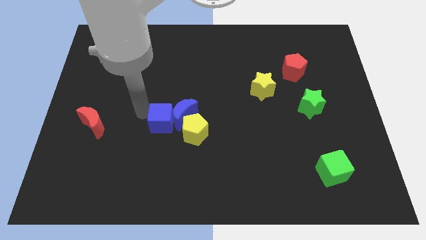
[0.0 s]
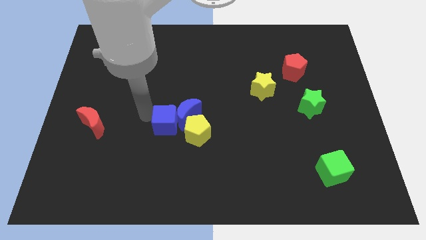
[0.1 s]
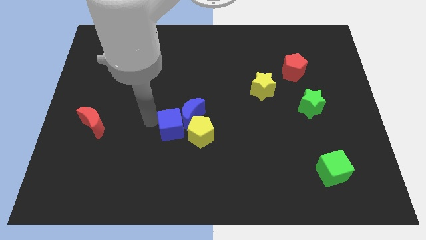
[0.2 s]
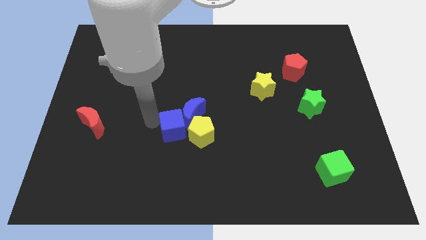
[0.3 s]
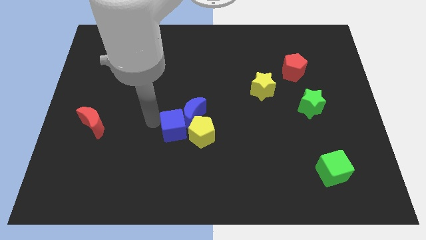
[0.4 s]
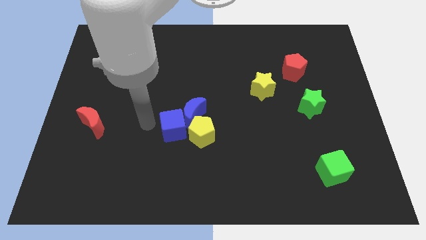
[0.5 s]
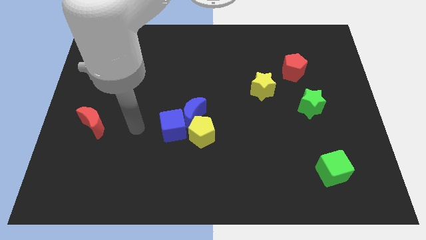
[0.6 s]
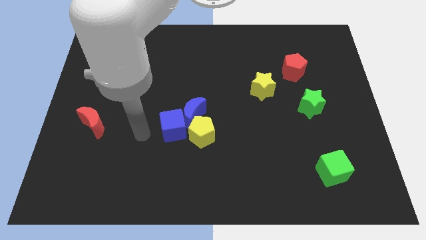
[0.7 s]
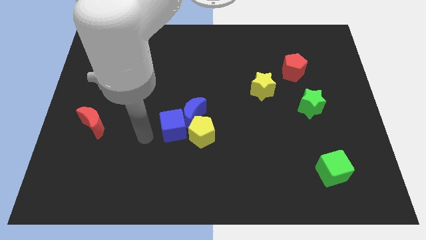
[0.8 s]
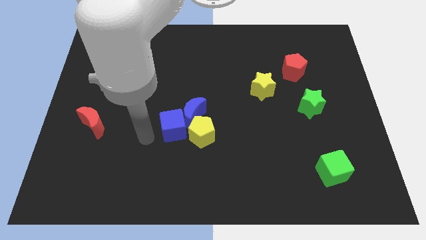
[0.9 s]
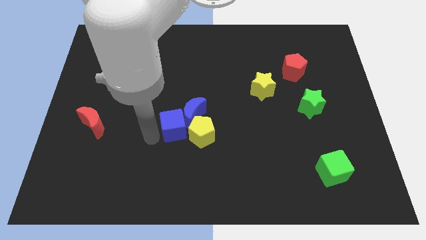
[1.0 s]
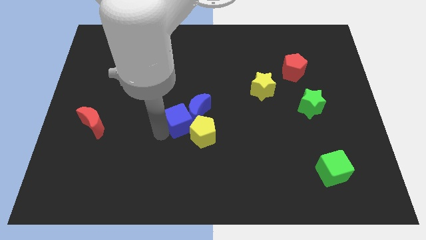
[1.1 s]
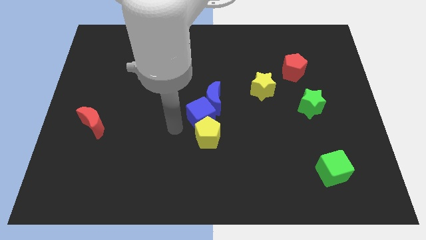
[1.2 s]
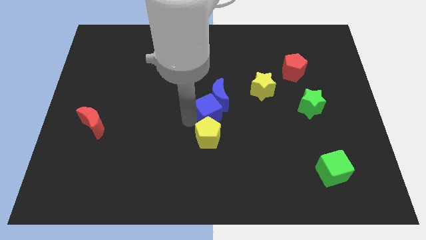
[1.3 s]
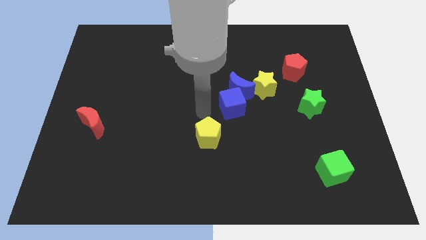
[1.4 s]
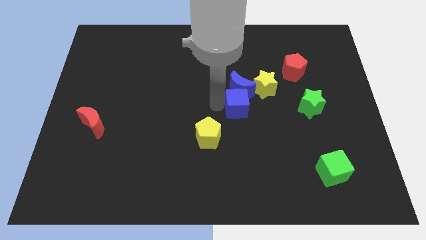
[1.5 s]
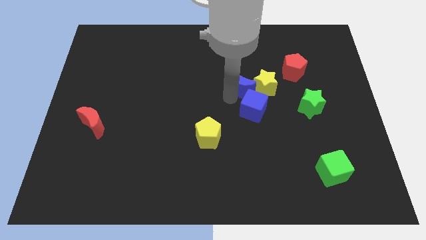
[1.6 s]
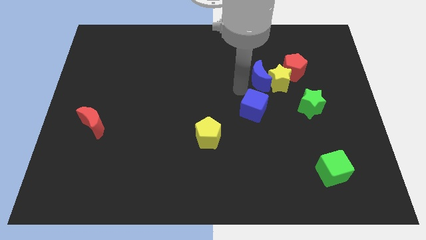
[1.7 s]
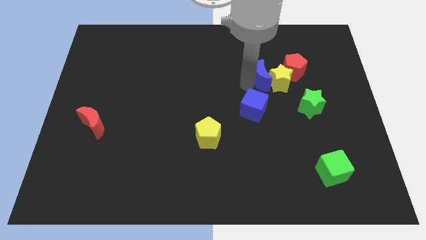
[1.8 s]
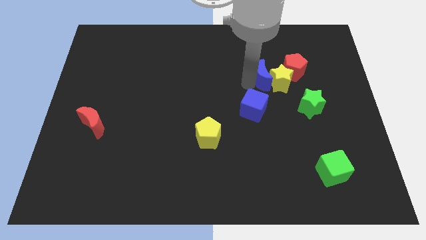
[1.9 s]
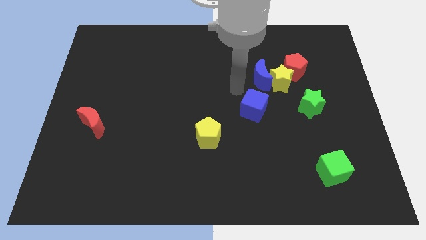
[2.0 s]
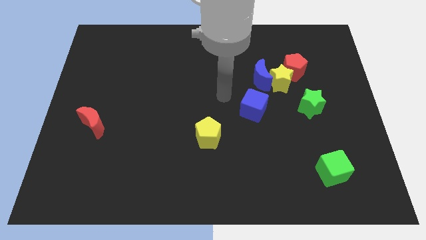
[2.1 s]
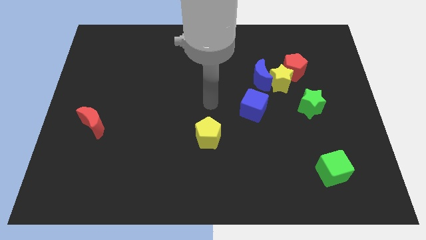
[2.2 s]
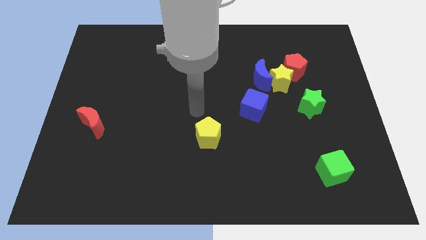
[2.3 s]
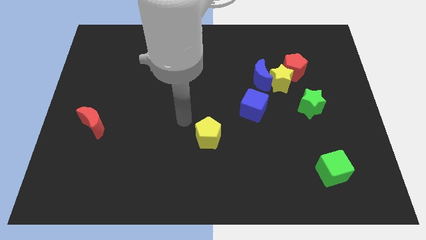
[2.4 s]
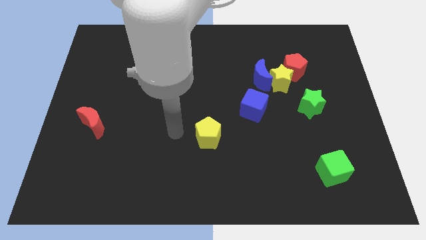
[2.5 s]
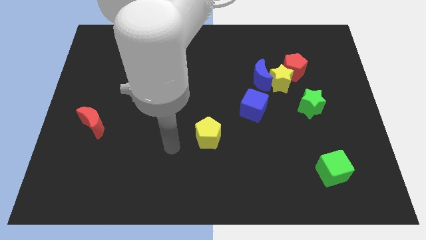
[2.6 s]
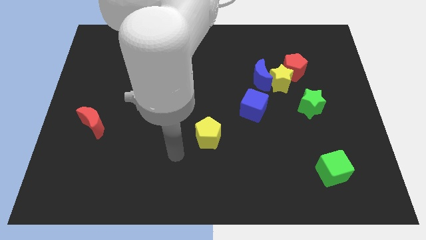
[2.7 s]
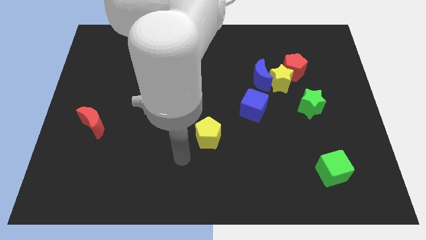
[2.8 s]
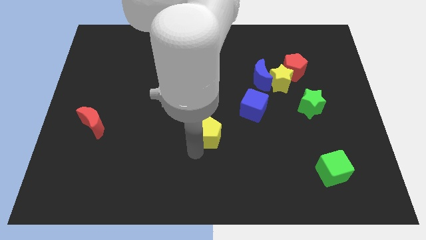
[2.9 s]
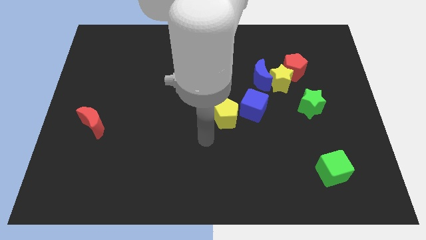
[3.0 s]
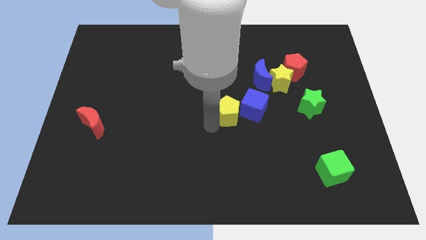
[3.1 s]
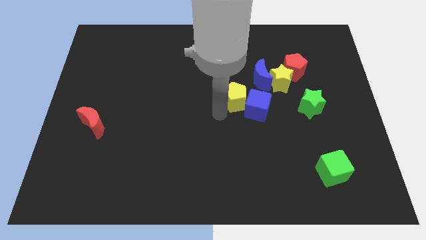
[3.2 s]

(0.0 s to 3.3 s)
move the blue moon into the yellow star

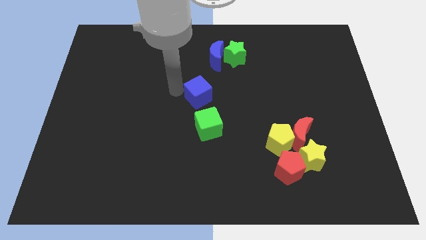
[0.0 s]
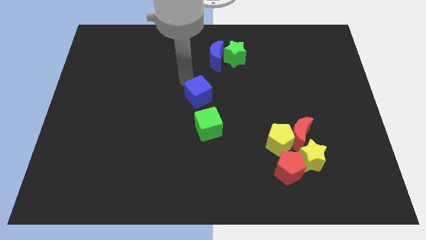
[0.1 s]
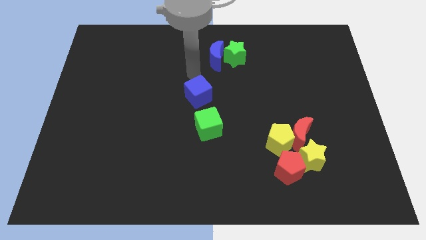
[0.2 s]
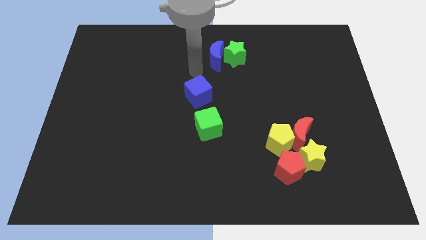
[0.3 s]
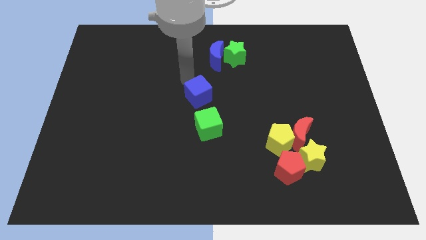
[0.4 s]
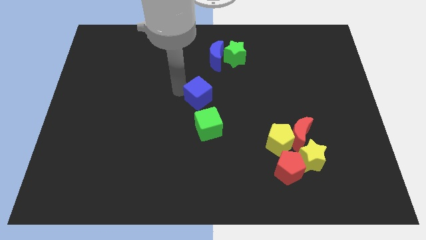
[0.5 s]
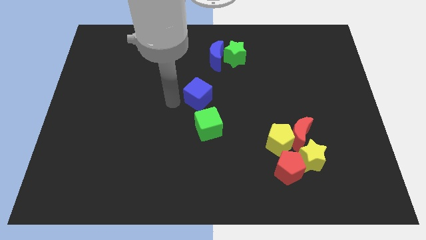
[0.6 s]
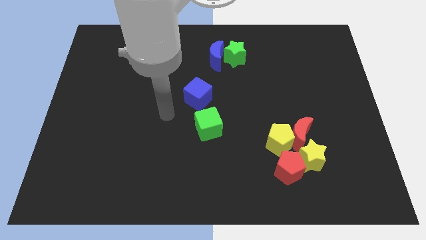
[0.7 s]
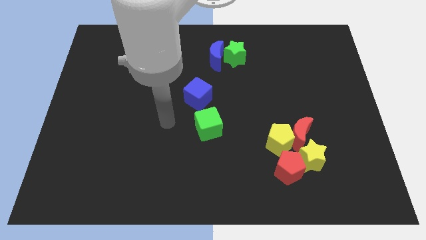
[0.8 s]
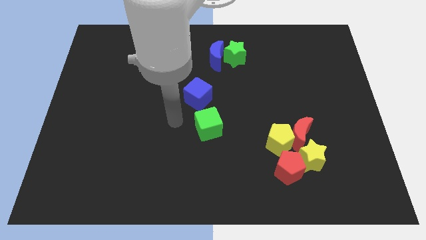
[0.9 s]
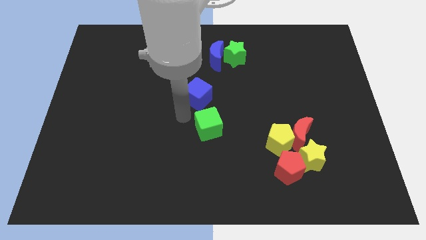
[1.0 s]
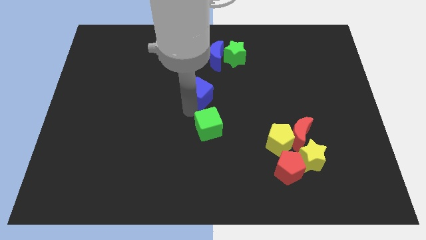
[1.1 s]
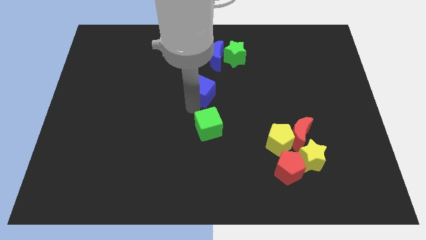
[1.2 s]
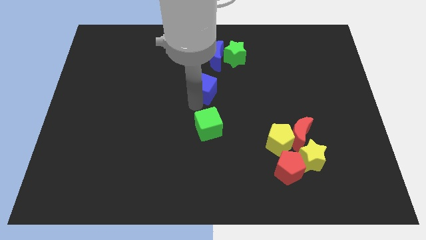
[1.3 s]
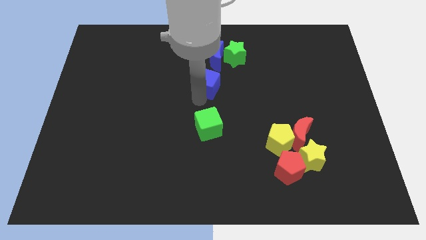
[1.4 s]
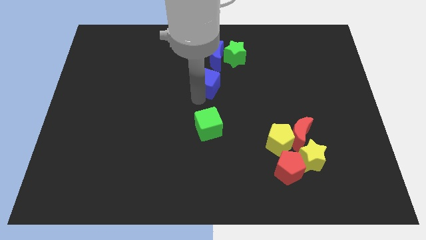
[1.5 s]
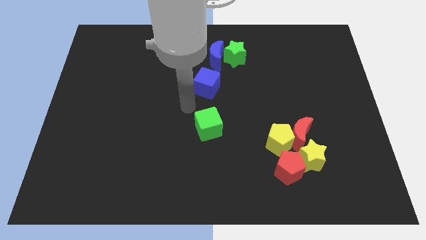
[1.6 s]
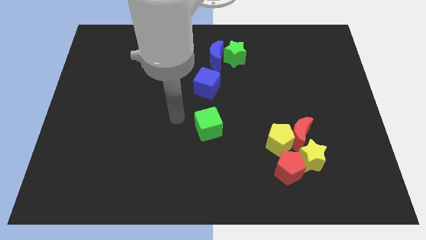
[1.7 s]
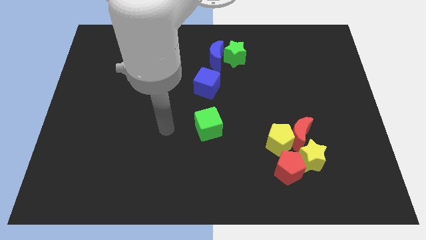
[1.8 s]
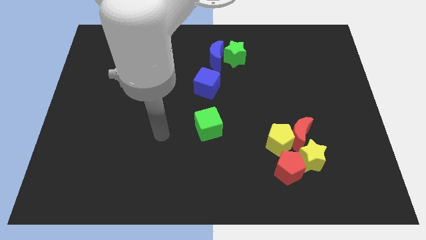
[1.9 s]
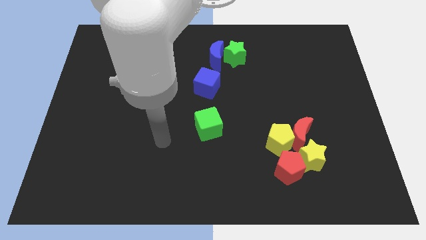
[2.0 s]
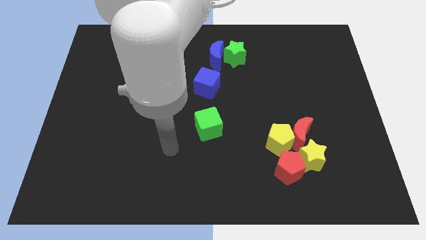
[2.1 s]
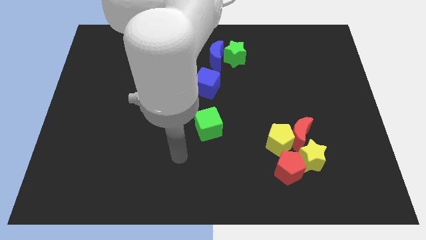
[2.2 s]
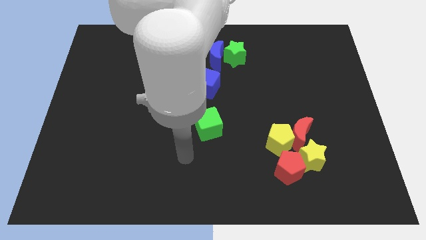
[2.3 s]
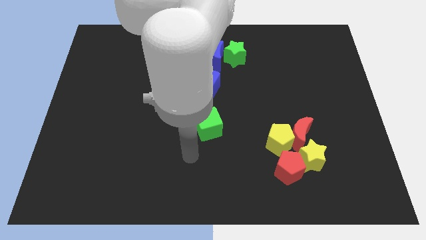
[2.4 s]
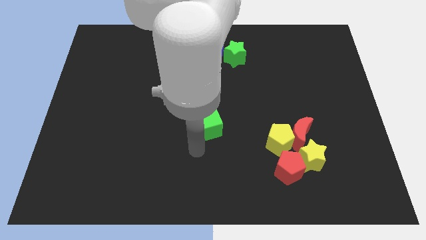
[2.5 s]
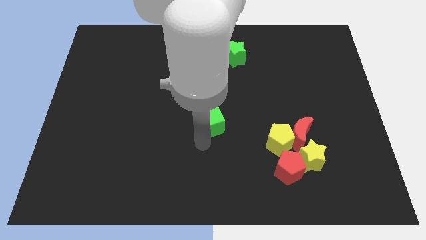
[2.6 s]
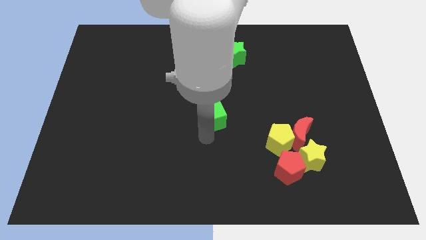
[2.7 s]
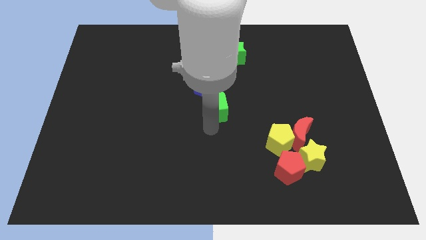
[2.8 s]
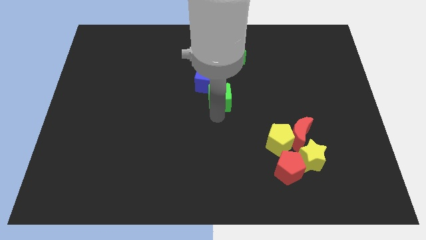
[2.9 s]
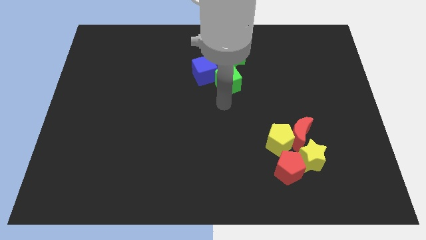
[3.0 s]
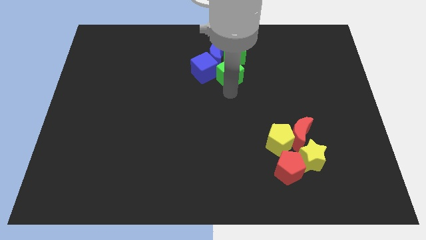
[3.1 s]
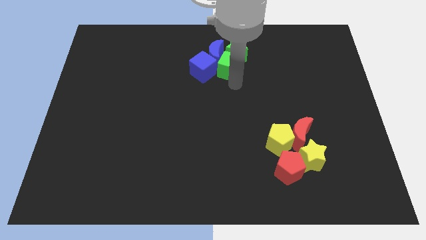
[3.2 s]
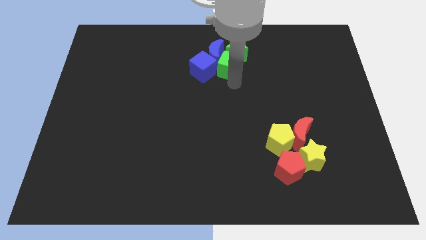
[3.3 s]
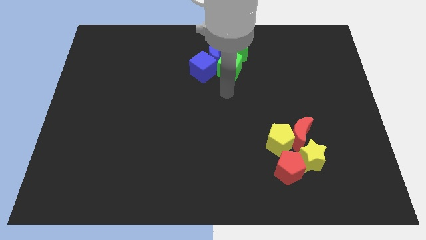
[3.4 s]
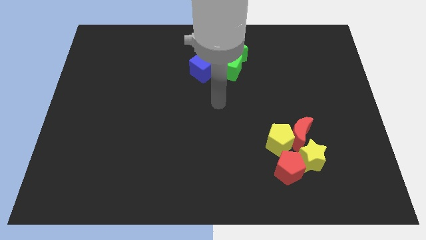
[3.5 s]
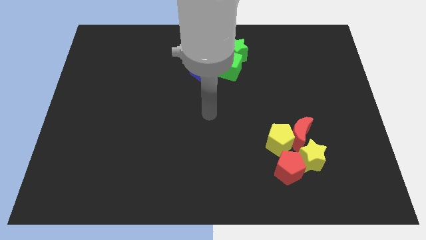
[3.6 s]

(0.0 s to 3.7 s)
push the blue cube and green cube into the blue crescent and green star

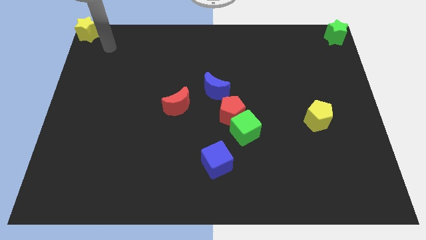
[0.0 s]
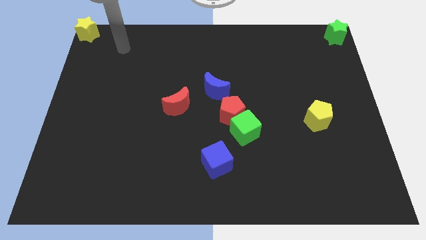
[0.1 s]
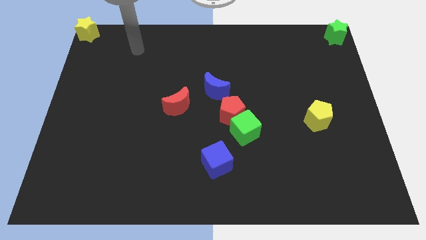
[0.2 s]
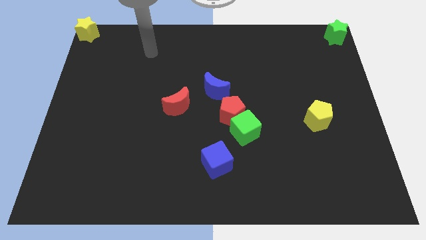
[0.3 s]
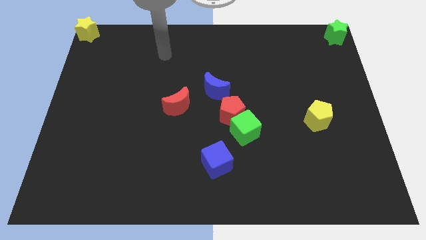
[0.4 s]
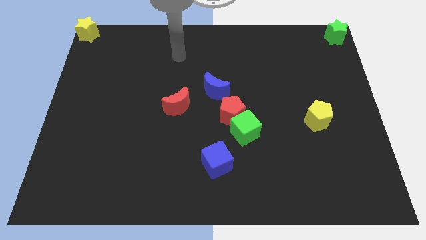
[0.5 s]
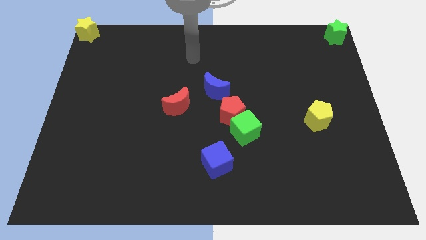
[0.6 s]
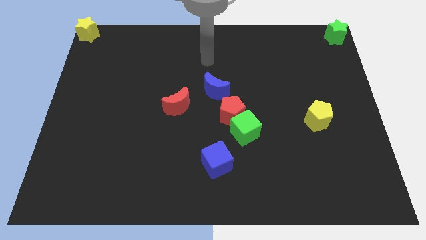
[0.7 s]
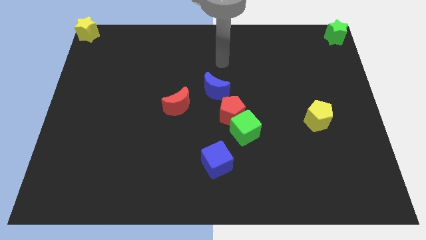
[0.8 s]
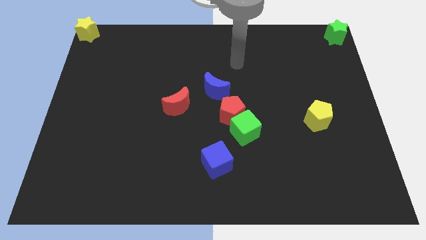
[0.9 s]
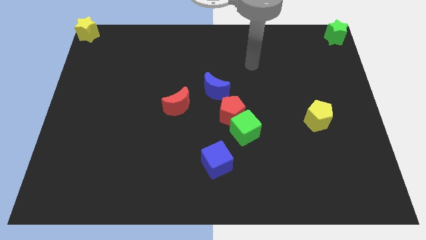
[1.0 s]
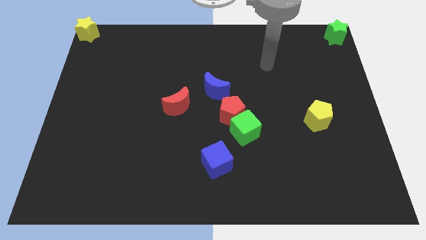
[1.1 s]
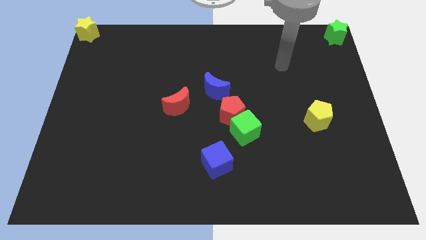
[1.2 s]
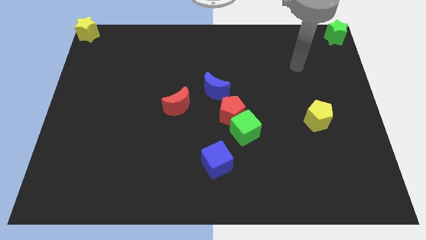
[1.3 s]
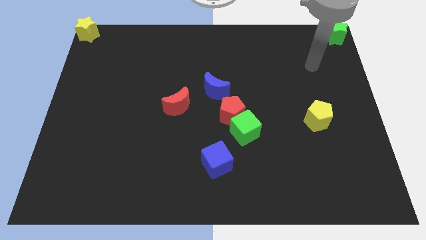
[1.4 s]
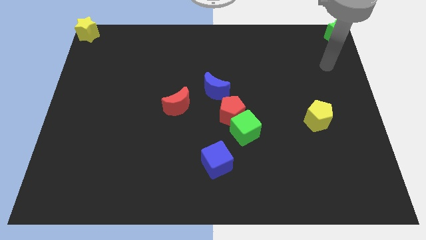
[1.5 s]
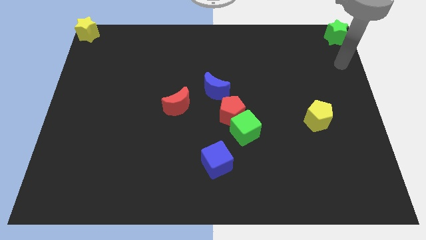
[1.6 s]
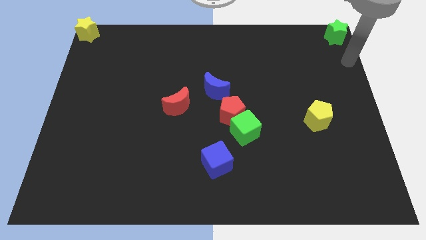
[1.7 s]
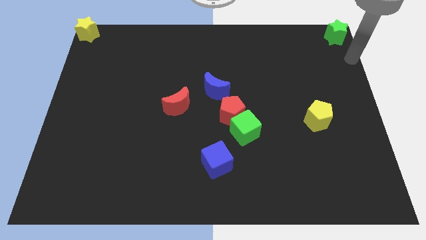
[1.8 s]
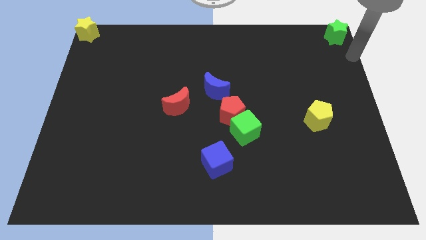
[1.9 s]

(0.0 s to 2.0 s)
move the arm left to right
